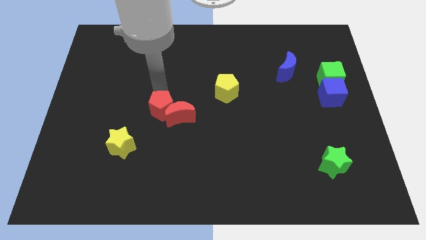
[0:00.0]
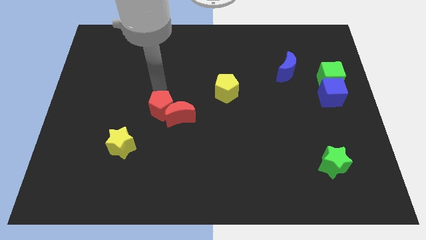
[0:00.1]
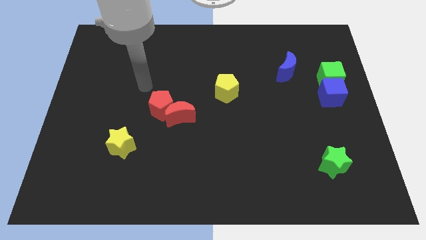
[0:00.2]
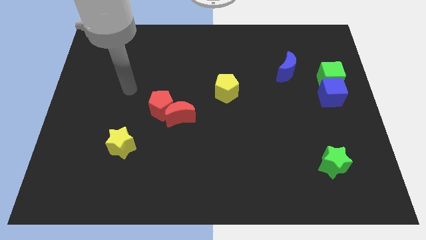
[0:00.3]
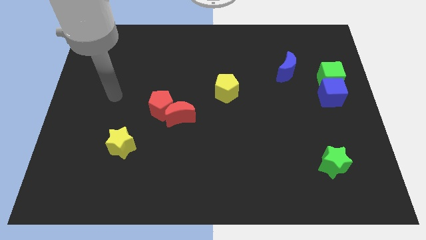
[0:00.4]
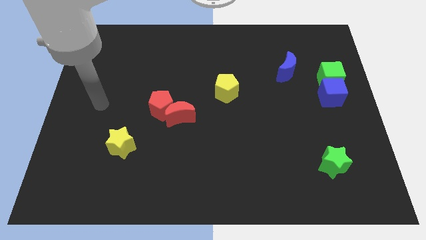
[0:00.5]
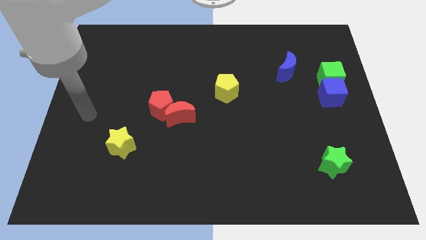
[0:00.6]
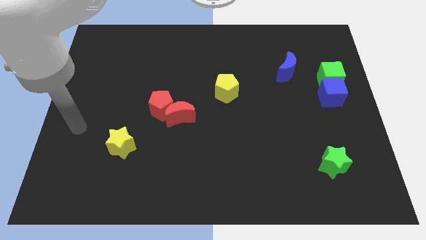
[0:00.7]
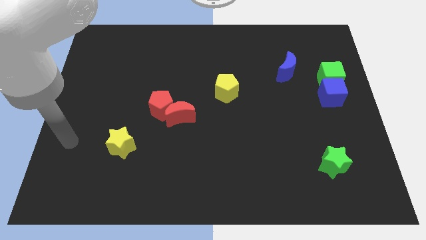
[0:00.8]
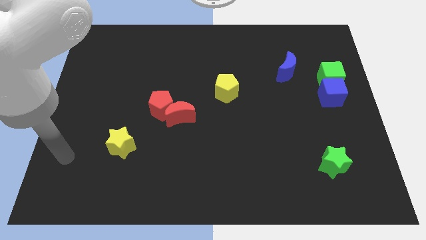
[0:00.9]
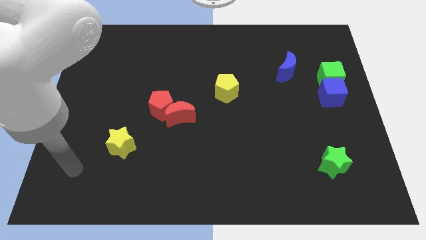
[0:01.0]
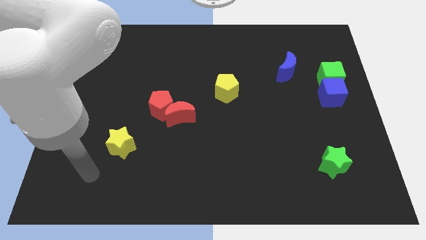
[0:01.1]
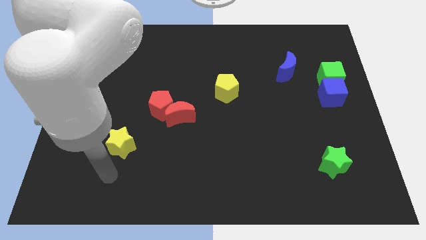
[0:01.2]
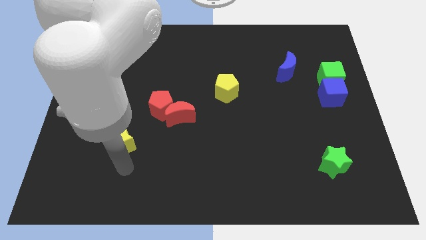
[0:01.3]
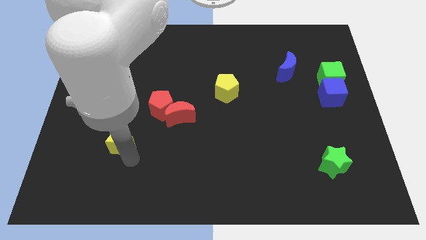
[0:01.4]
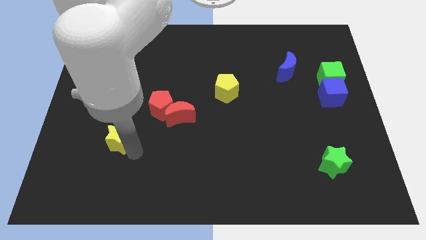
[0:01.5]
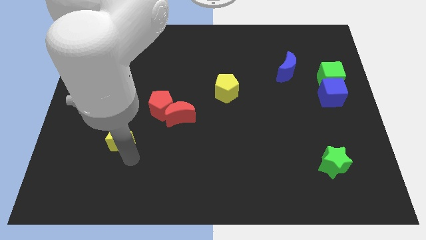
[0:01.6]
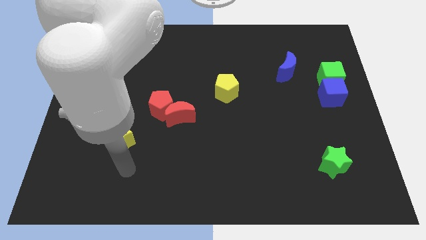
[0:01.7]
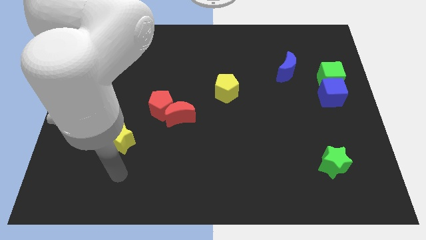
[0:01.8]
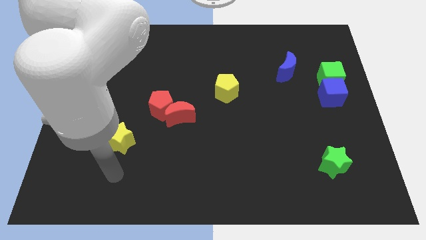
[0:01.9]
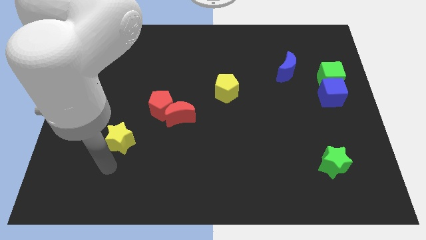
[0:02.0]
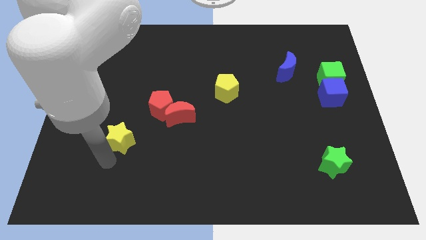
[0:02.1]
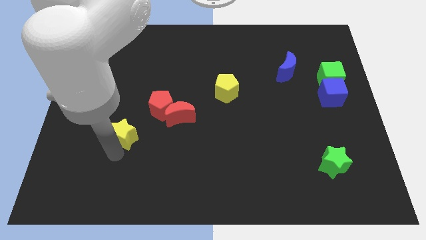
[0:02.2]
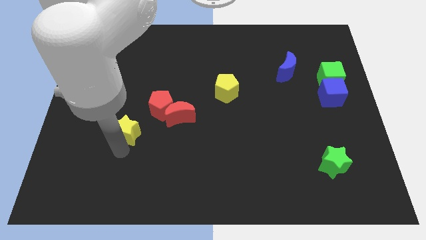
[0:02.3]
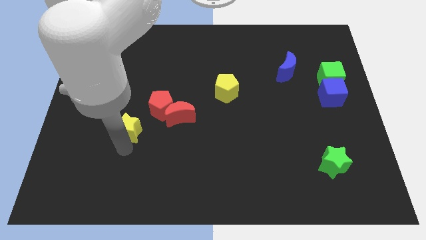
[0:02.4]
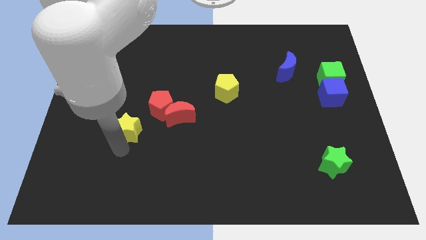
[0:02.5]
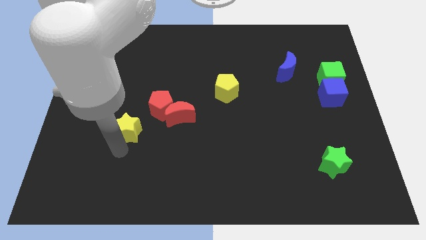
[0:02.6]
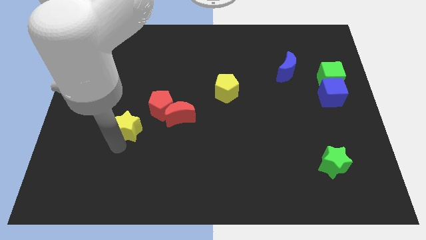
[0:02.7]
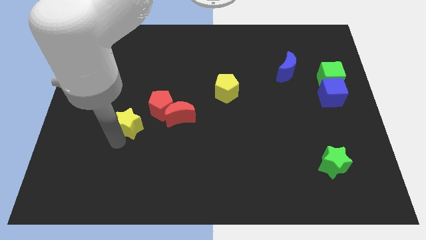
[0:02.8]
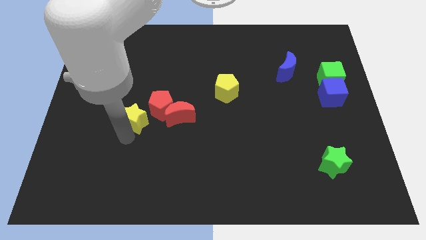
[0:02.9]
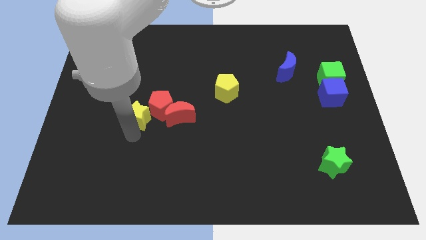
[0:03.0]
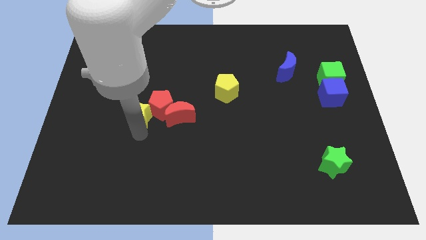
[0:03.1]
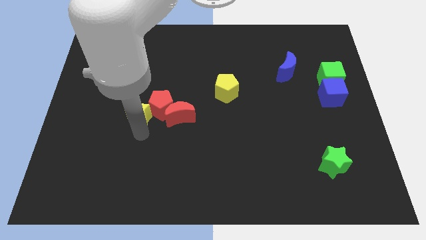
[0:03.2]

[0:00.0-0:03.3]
move your arm away from red pentagon

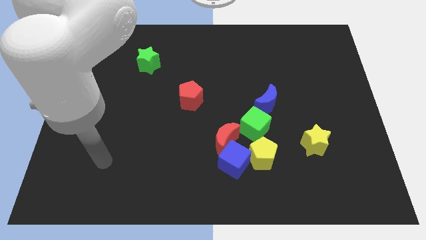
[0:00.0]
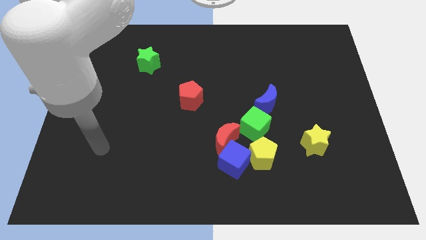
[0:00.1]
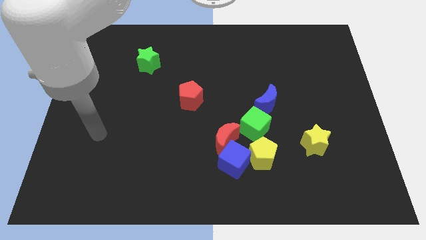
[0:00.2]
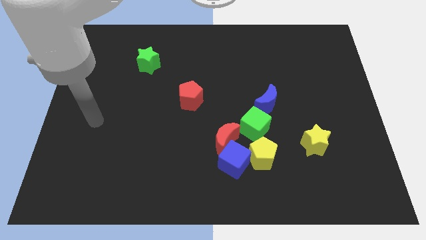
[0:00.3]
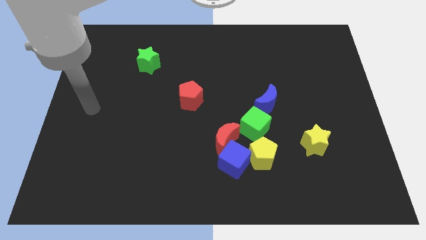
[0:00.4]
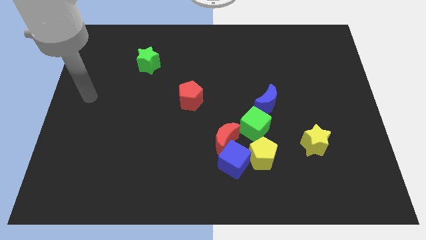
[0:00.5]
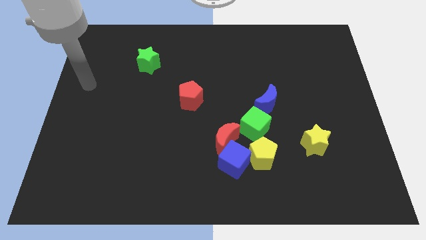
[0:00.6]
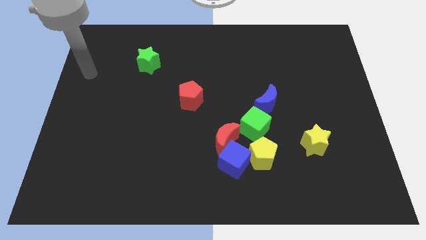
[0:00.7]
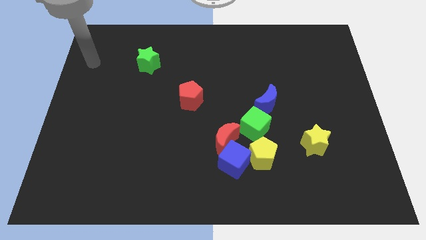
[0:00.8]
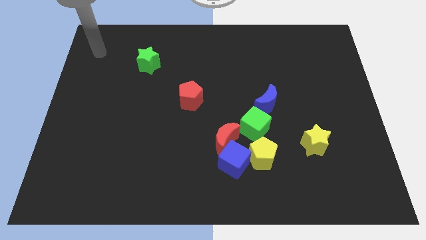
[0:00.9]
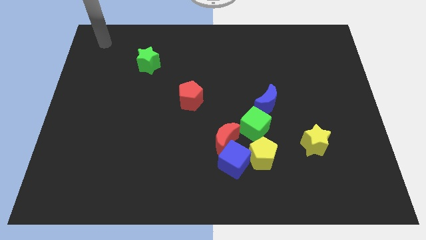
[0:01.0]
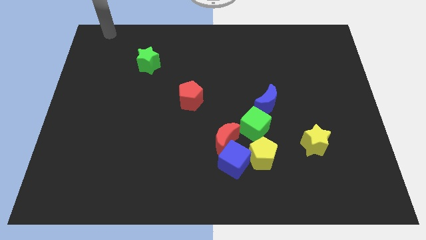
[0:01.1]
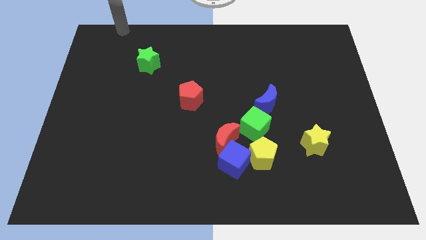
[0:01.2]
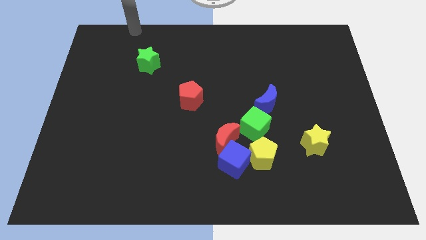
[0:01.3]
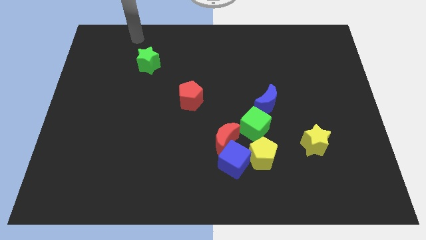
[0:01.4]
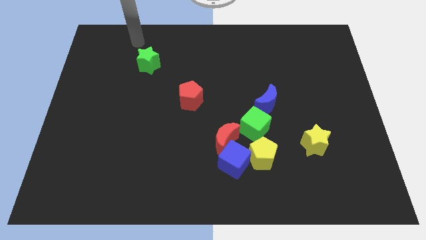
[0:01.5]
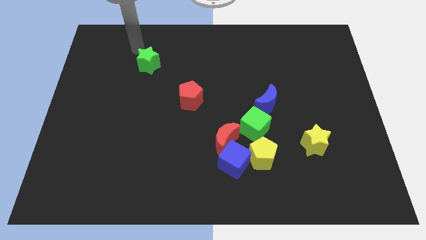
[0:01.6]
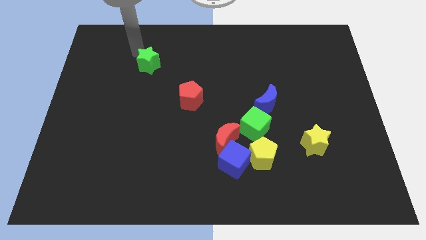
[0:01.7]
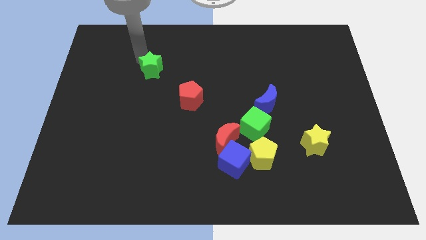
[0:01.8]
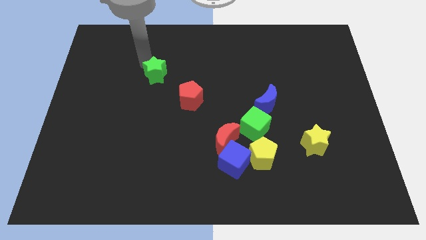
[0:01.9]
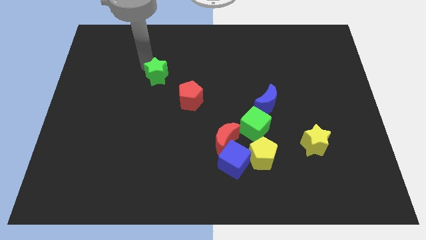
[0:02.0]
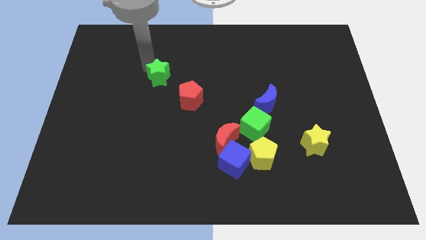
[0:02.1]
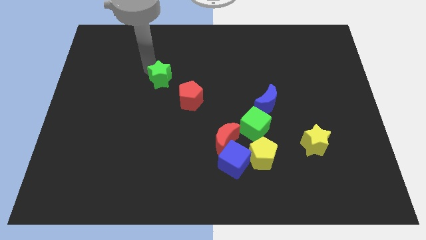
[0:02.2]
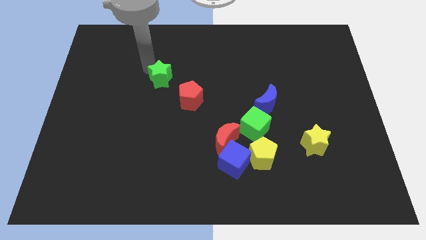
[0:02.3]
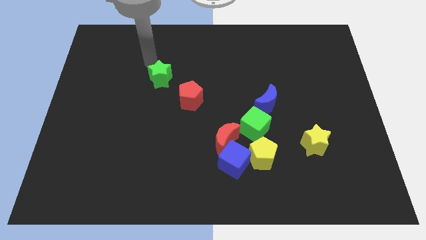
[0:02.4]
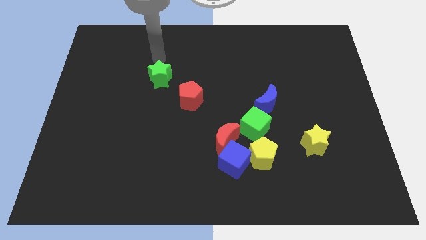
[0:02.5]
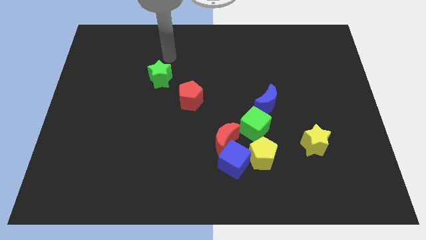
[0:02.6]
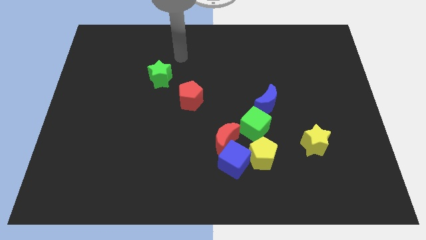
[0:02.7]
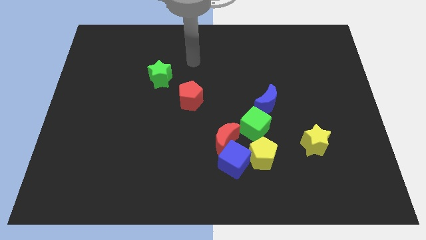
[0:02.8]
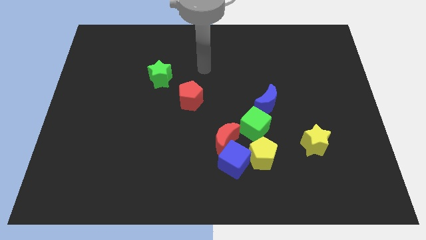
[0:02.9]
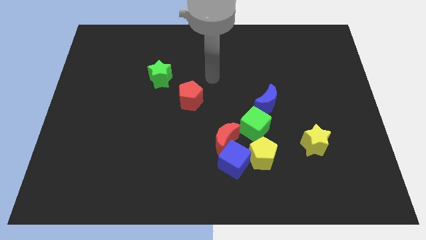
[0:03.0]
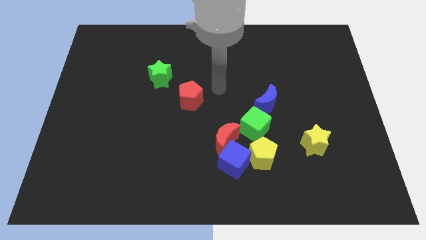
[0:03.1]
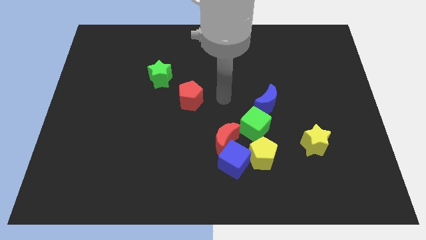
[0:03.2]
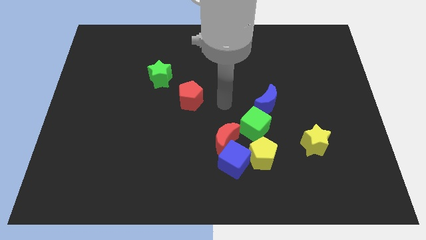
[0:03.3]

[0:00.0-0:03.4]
move the green star closely to the red pentagon diagonally

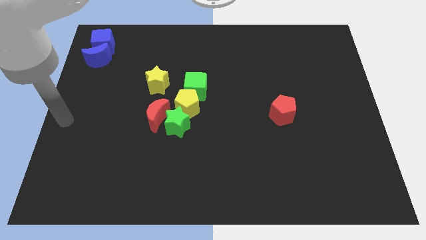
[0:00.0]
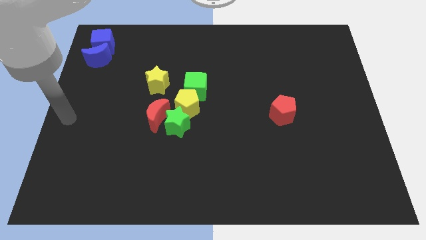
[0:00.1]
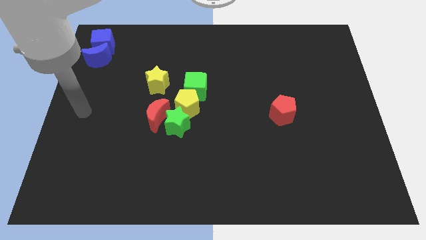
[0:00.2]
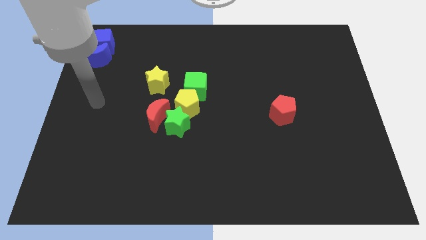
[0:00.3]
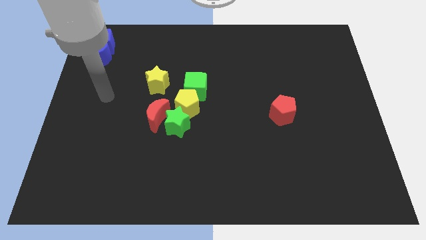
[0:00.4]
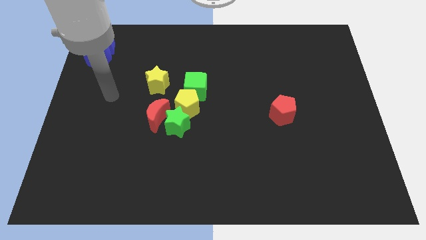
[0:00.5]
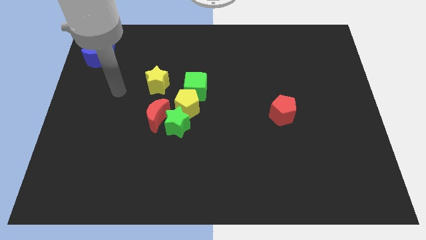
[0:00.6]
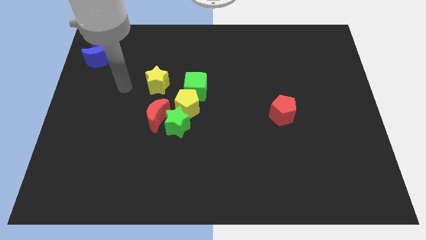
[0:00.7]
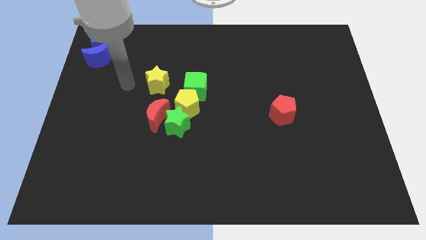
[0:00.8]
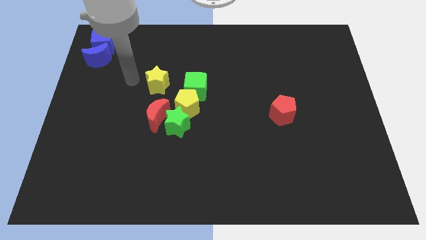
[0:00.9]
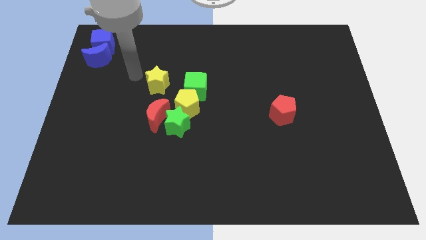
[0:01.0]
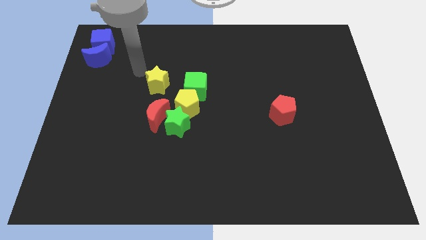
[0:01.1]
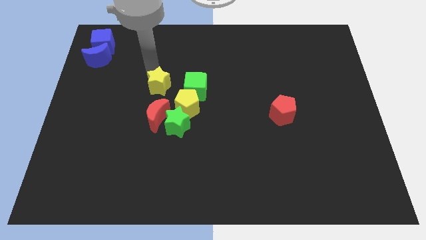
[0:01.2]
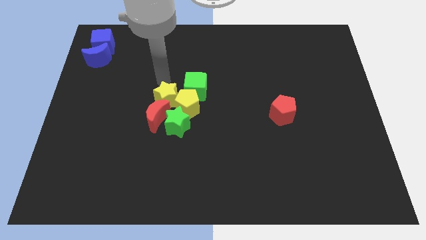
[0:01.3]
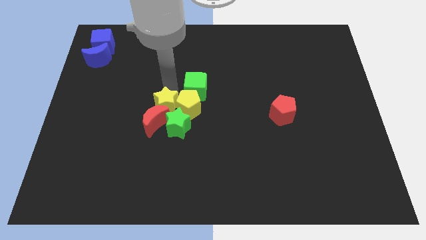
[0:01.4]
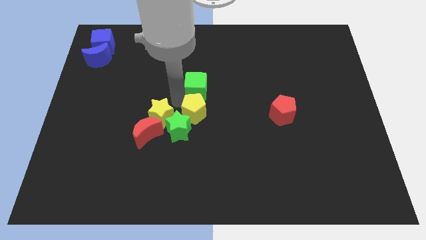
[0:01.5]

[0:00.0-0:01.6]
move yellow star close to the group of blocks

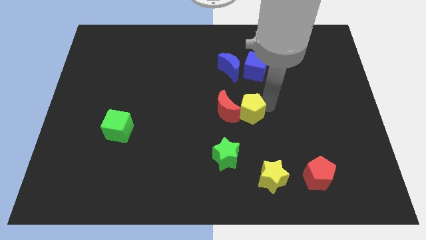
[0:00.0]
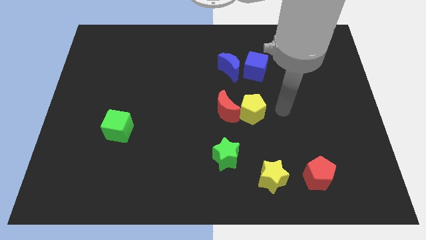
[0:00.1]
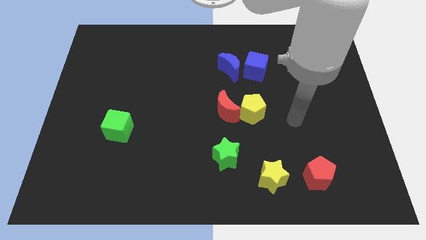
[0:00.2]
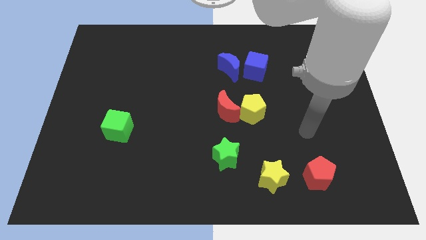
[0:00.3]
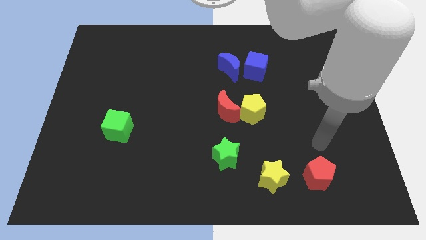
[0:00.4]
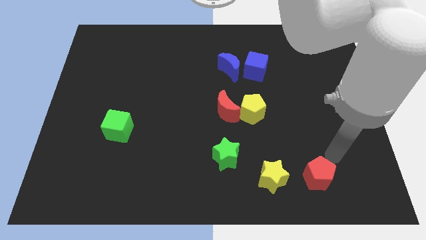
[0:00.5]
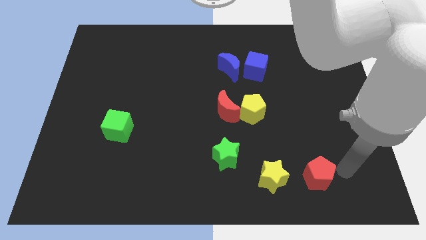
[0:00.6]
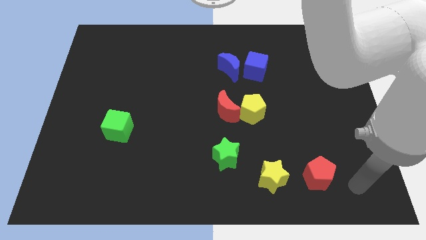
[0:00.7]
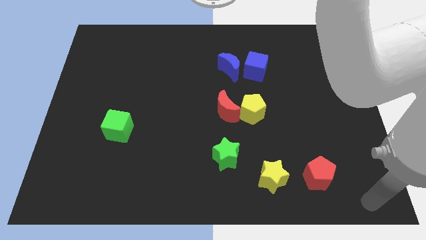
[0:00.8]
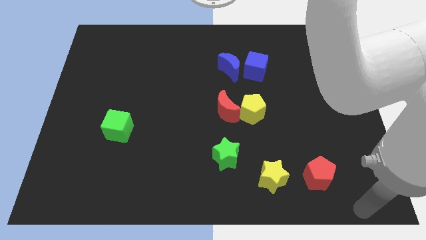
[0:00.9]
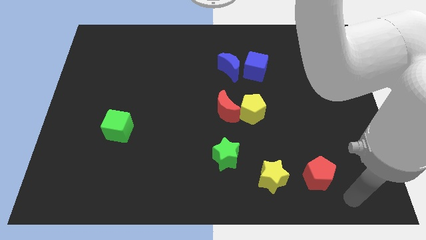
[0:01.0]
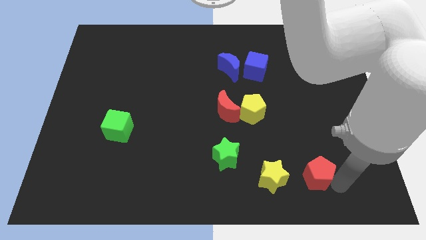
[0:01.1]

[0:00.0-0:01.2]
move your arm towards bottom right
